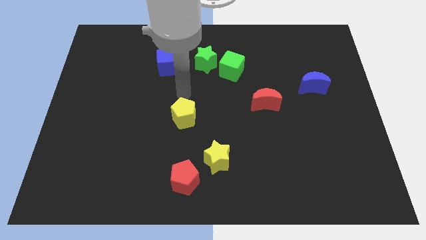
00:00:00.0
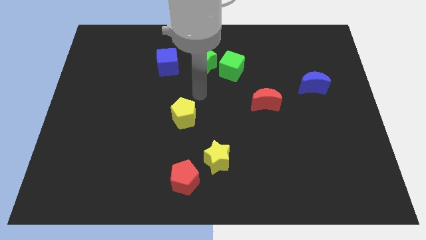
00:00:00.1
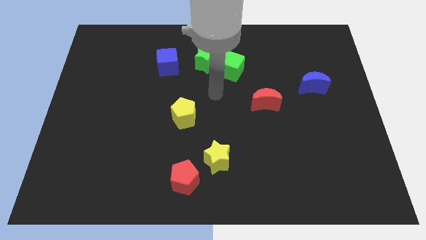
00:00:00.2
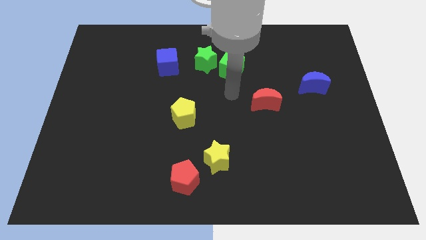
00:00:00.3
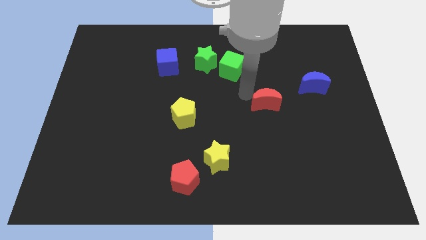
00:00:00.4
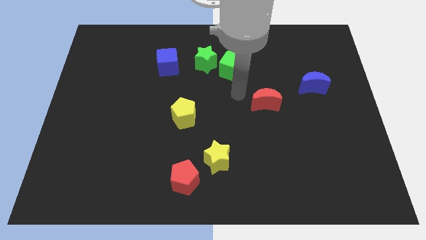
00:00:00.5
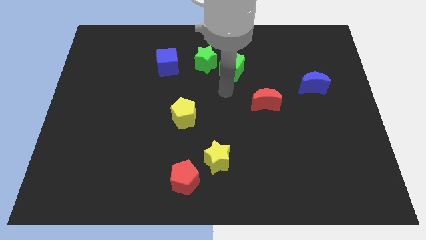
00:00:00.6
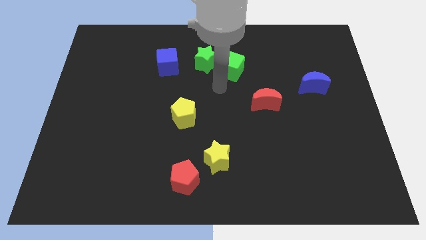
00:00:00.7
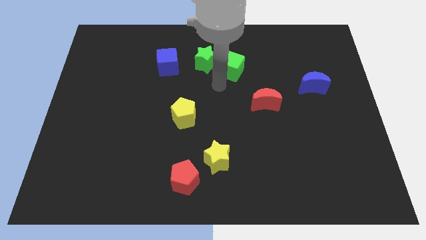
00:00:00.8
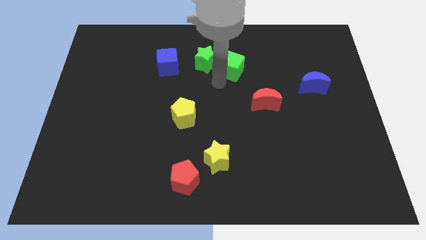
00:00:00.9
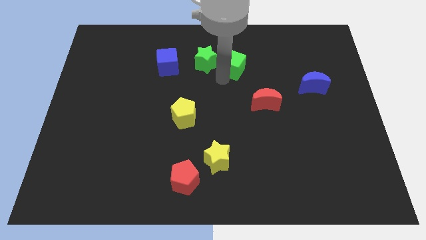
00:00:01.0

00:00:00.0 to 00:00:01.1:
touch the bottom of the green cube

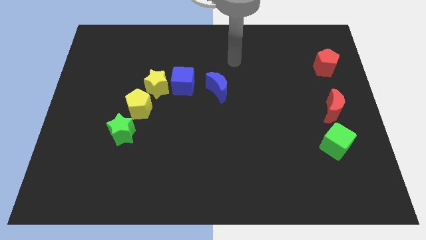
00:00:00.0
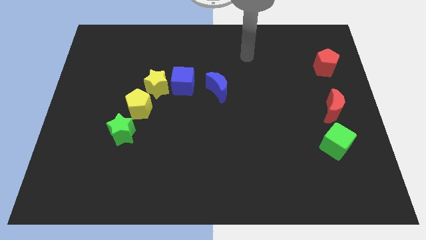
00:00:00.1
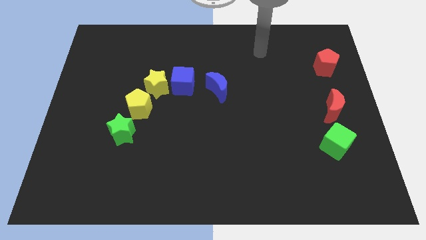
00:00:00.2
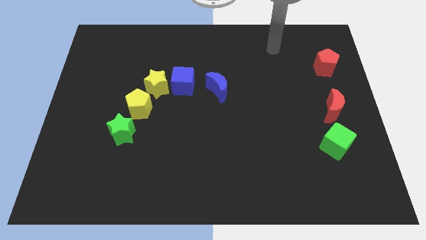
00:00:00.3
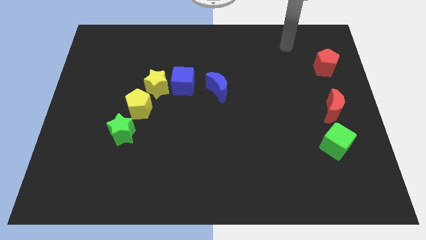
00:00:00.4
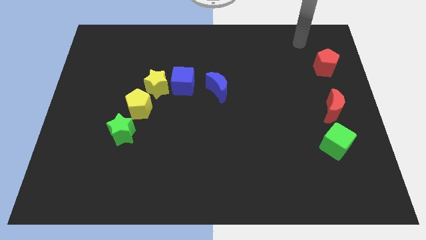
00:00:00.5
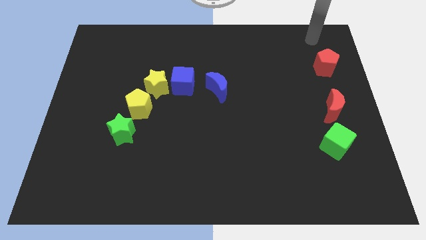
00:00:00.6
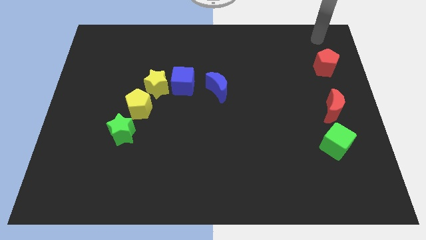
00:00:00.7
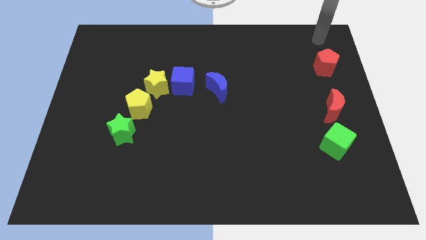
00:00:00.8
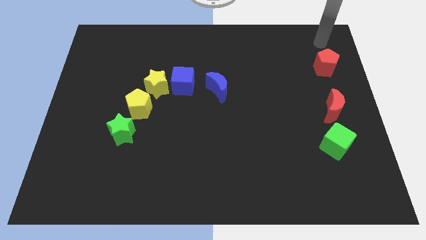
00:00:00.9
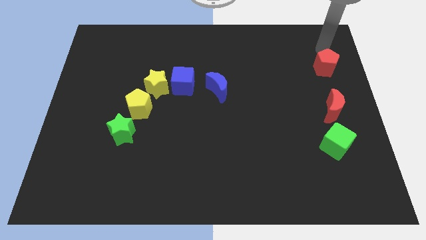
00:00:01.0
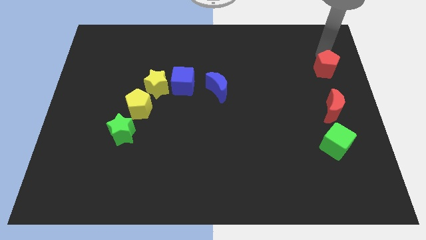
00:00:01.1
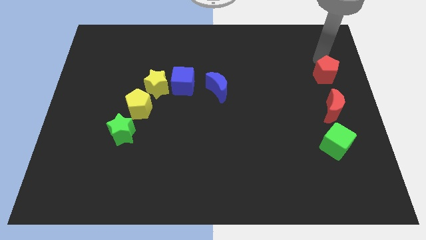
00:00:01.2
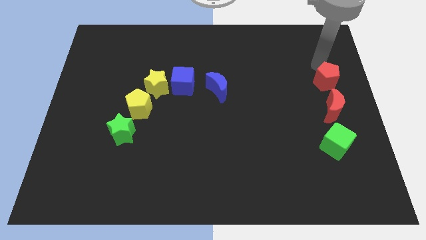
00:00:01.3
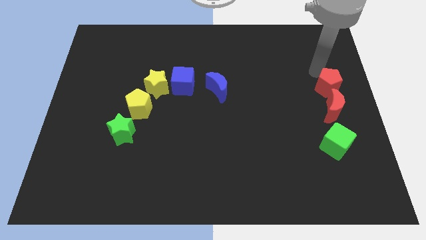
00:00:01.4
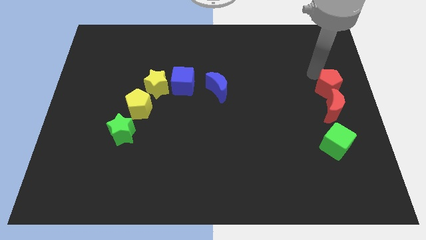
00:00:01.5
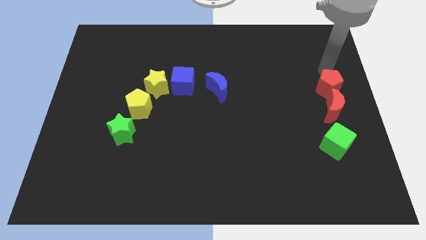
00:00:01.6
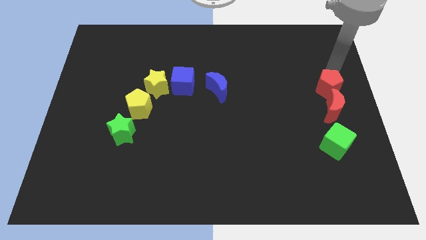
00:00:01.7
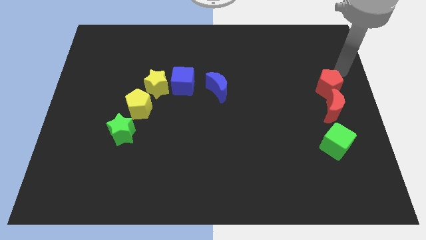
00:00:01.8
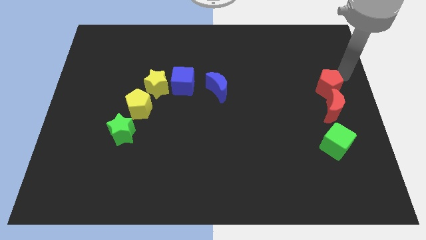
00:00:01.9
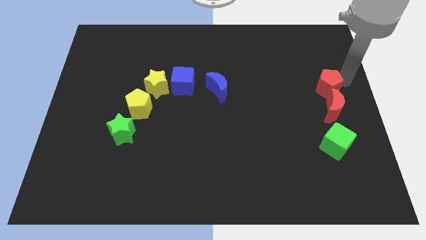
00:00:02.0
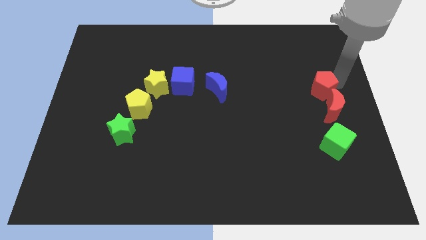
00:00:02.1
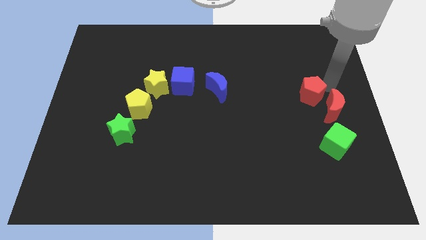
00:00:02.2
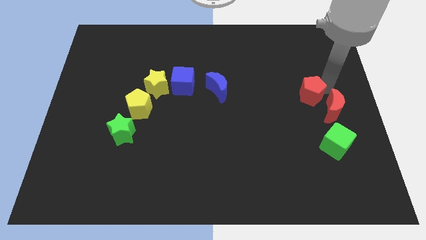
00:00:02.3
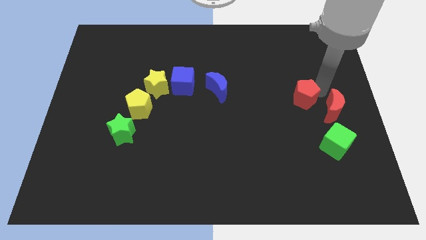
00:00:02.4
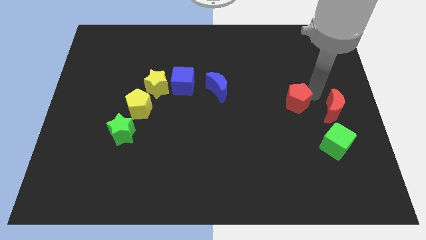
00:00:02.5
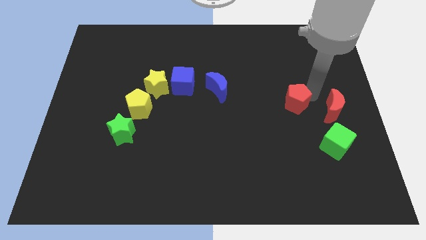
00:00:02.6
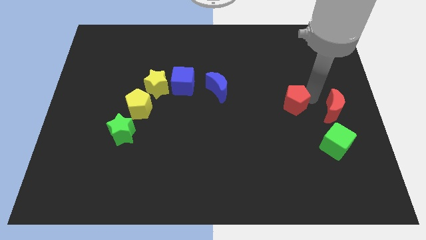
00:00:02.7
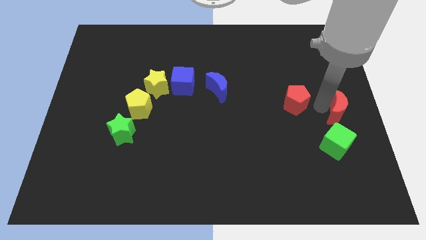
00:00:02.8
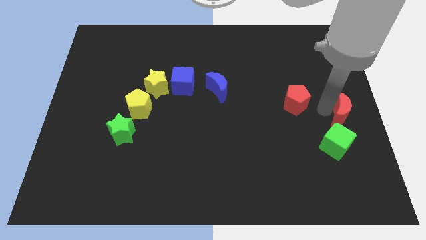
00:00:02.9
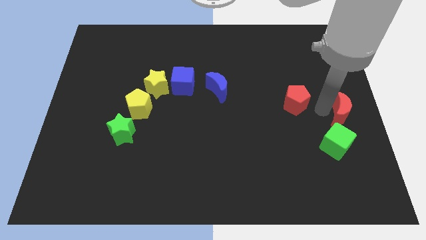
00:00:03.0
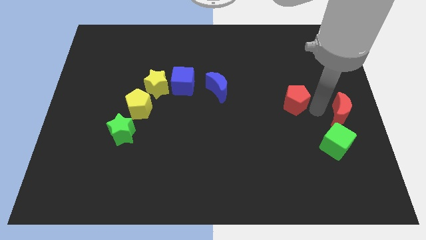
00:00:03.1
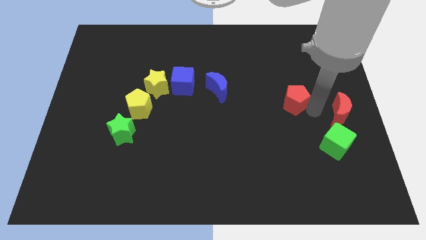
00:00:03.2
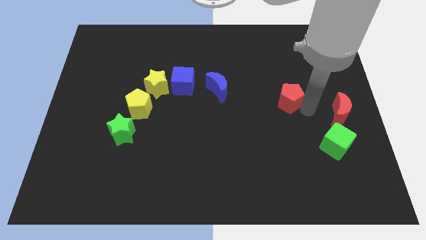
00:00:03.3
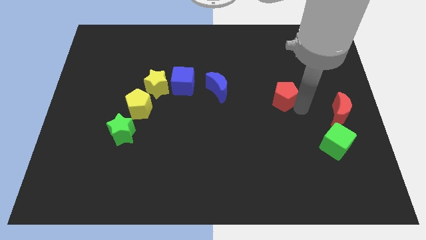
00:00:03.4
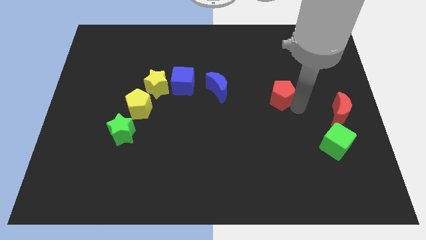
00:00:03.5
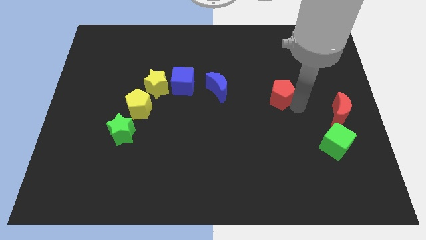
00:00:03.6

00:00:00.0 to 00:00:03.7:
separate the red pentagon from the red crescent

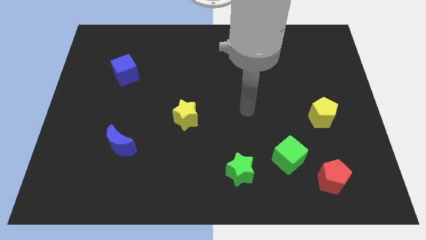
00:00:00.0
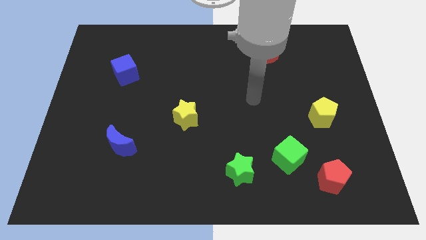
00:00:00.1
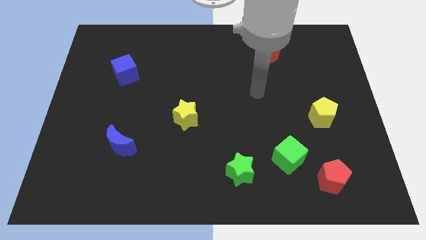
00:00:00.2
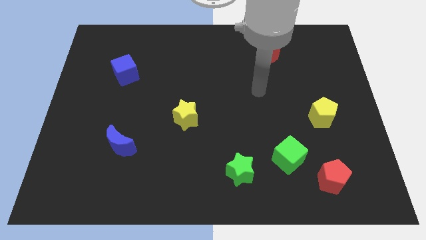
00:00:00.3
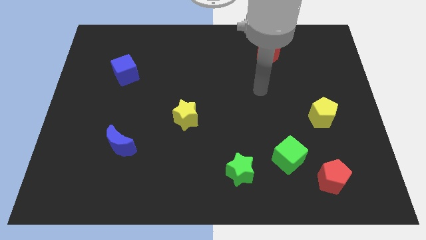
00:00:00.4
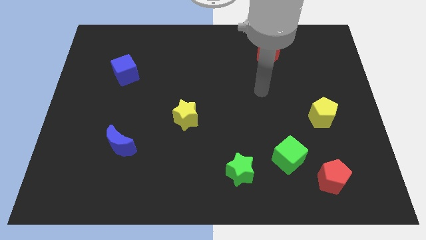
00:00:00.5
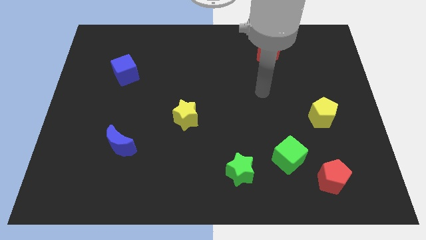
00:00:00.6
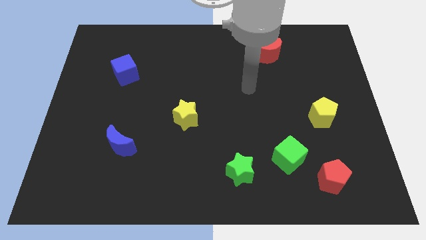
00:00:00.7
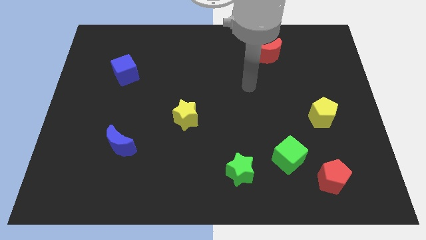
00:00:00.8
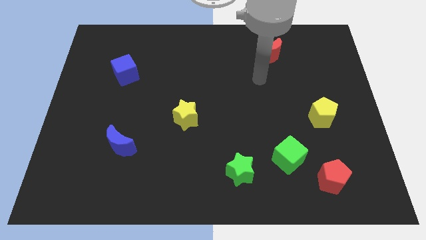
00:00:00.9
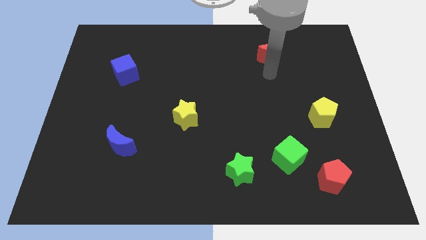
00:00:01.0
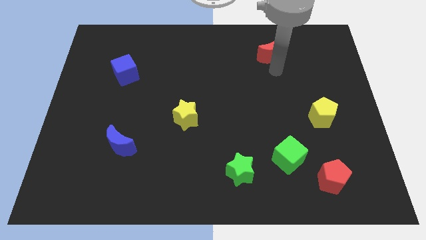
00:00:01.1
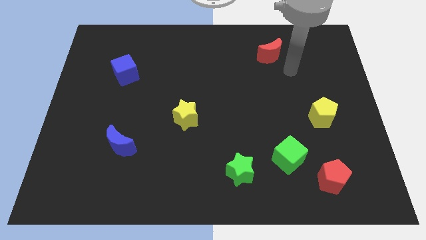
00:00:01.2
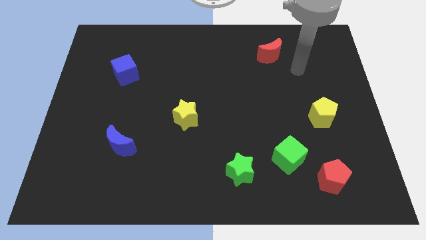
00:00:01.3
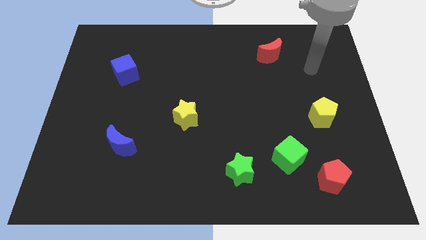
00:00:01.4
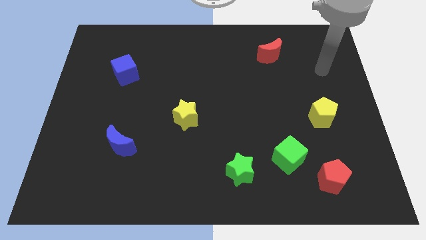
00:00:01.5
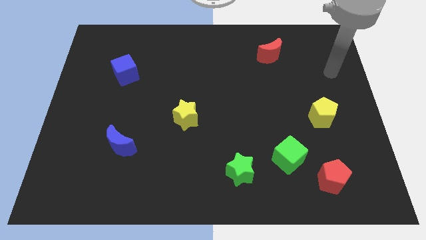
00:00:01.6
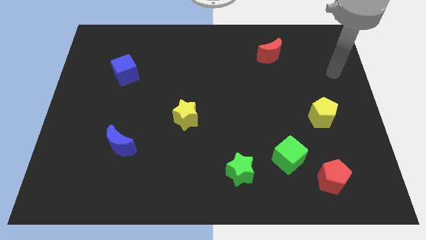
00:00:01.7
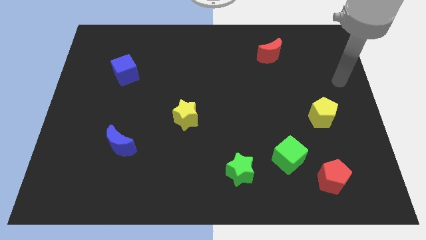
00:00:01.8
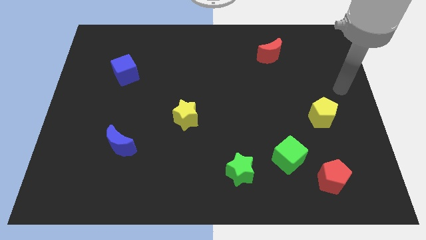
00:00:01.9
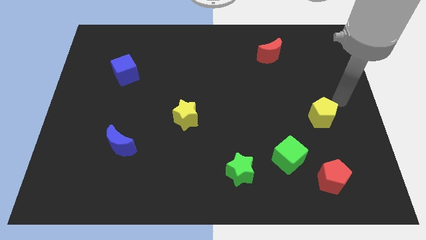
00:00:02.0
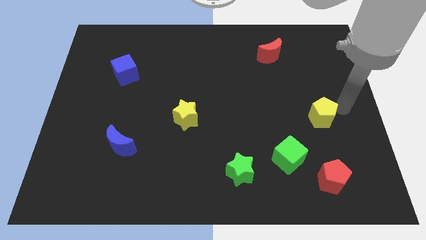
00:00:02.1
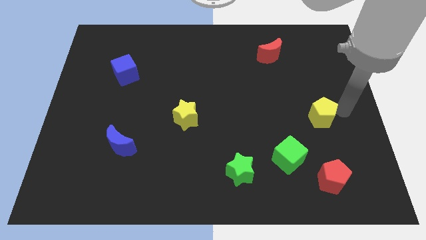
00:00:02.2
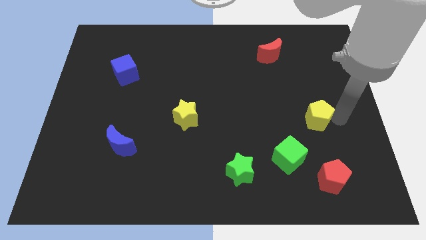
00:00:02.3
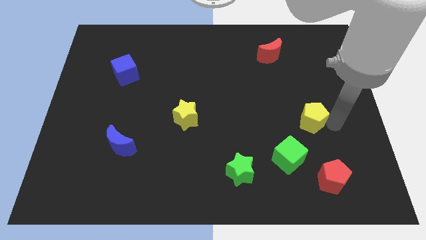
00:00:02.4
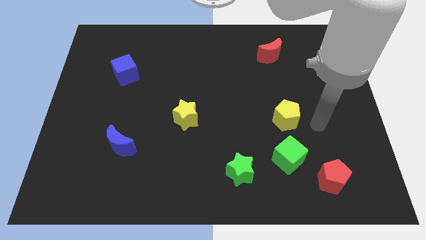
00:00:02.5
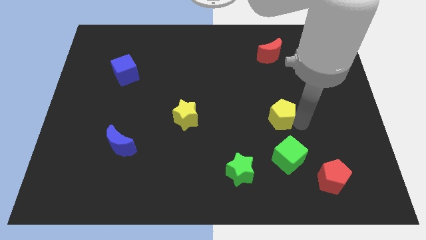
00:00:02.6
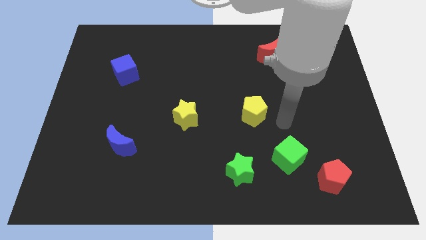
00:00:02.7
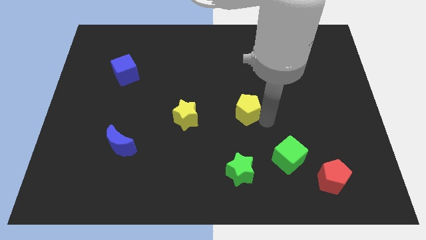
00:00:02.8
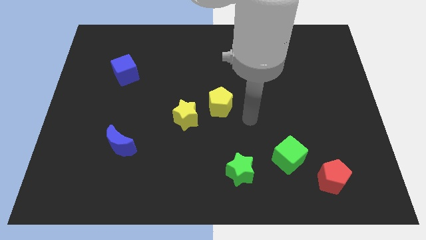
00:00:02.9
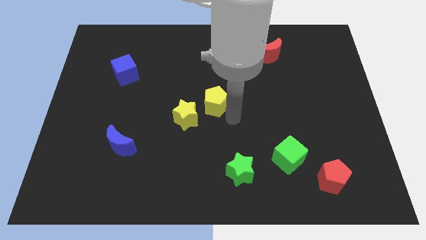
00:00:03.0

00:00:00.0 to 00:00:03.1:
move the yellow pentagon close to the yellow star

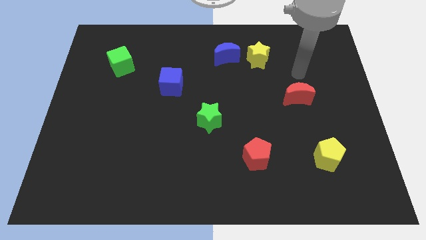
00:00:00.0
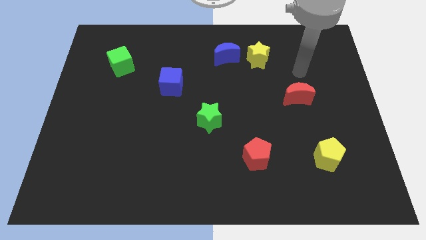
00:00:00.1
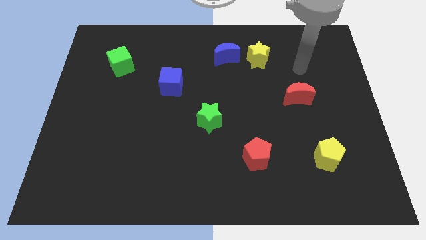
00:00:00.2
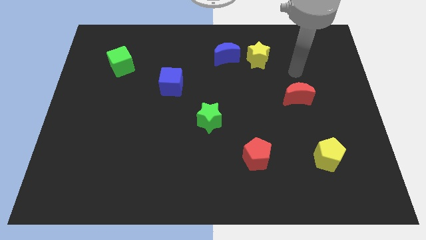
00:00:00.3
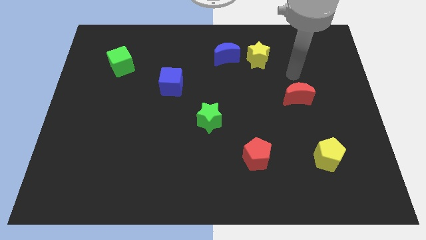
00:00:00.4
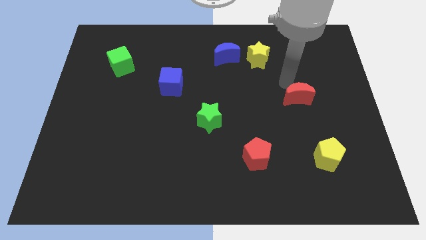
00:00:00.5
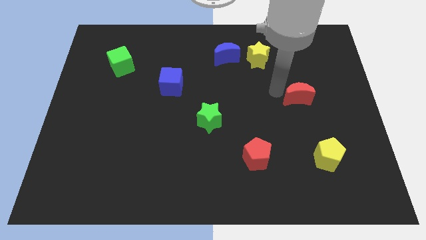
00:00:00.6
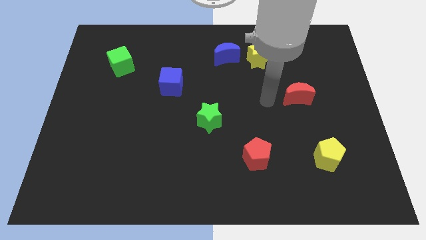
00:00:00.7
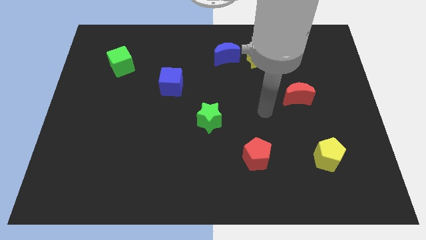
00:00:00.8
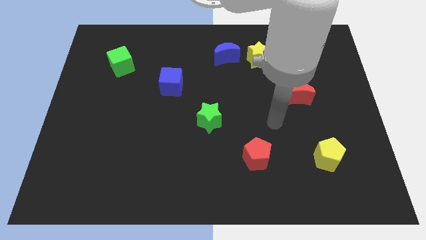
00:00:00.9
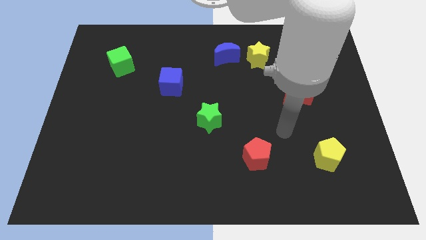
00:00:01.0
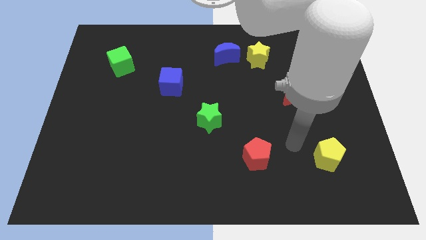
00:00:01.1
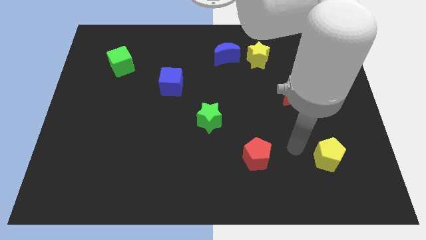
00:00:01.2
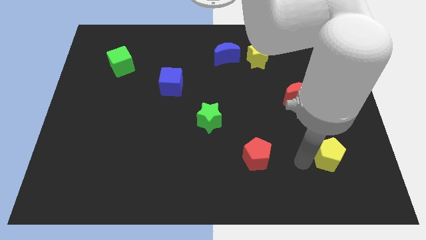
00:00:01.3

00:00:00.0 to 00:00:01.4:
place your hand in between the red pentagon and yellow pentagon
